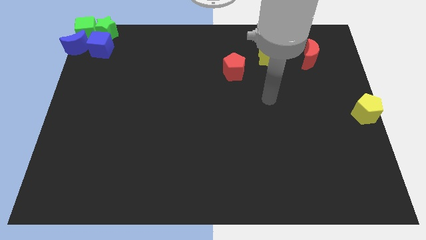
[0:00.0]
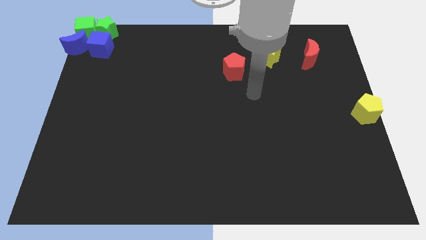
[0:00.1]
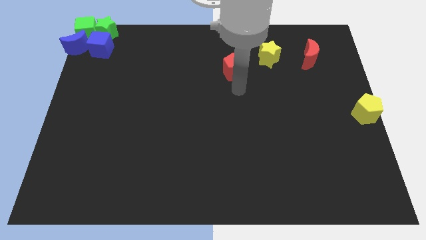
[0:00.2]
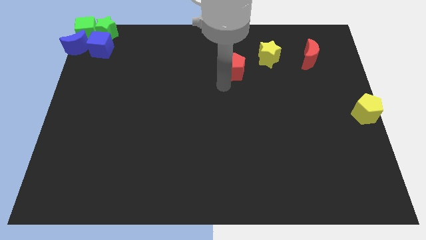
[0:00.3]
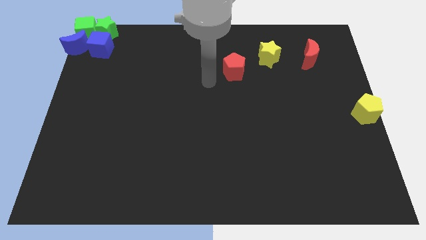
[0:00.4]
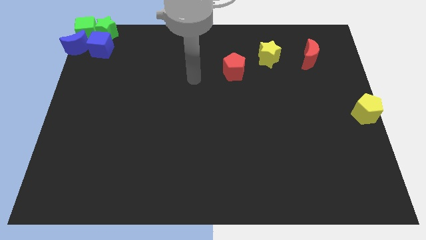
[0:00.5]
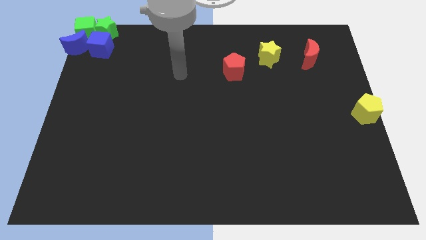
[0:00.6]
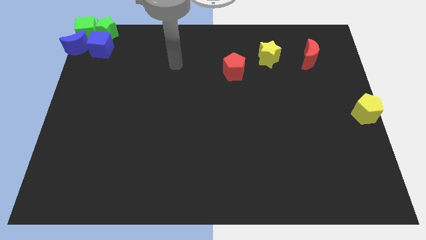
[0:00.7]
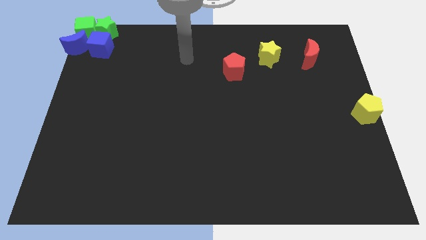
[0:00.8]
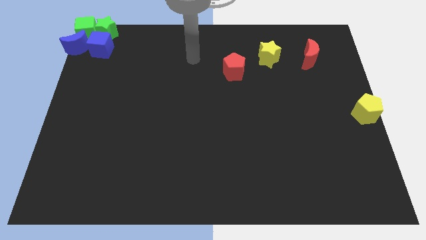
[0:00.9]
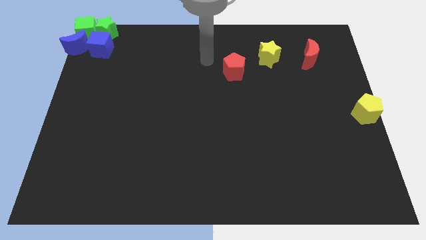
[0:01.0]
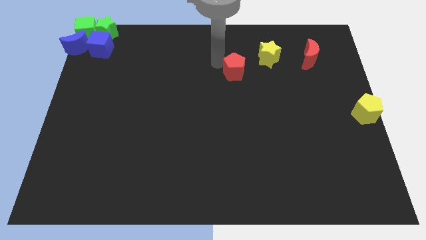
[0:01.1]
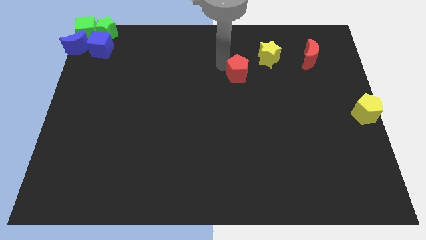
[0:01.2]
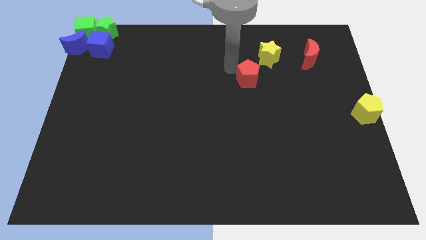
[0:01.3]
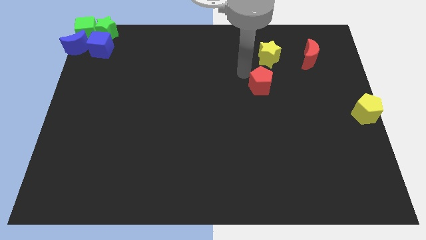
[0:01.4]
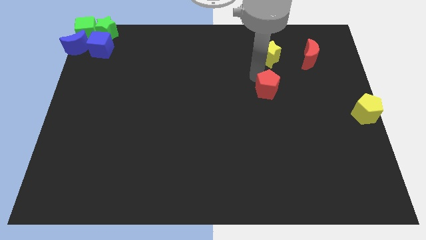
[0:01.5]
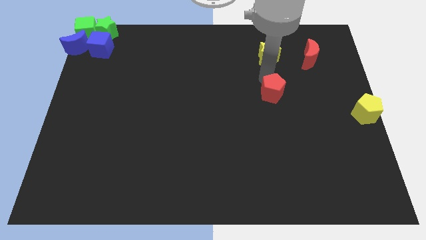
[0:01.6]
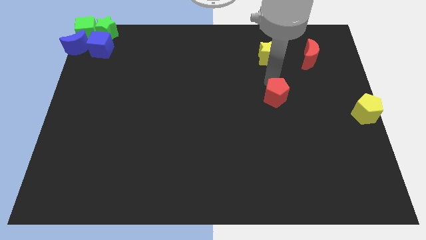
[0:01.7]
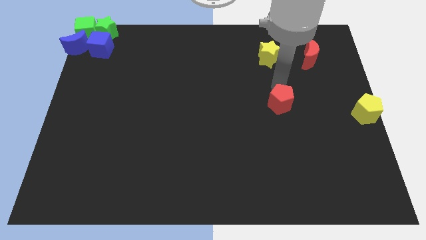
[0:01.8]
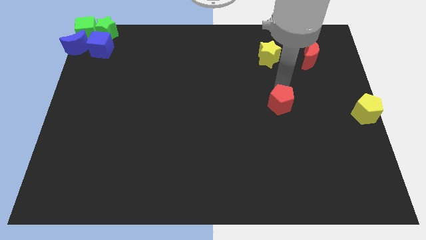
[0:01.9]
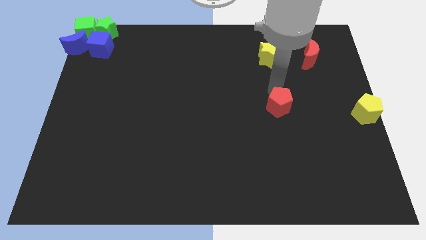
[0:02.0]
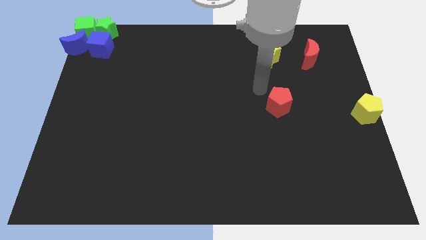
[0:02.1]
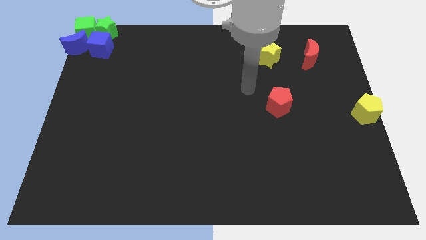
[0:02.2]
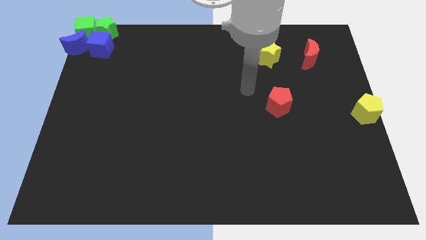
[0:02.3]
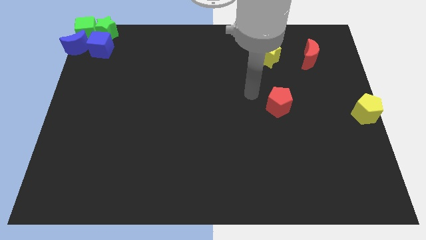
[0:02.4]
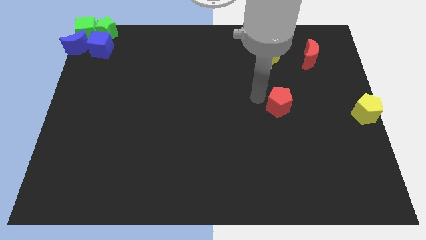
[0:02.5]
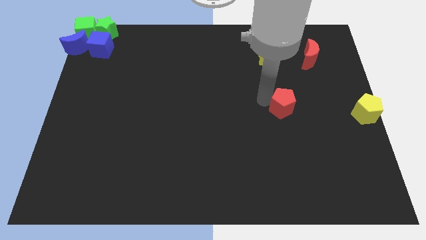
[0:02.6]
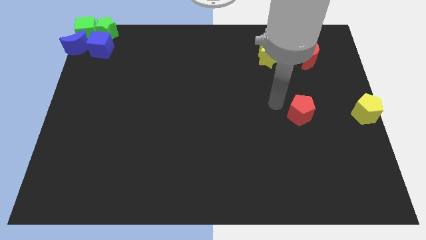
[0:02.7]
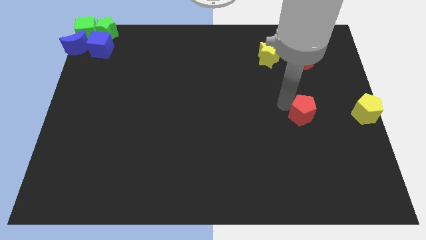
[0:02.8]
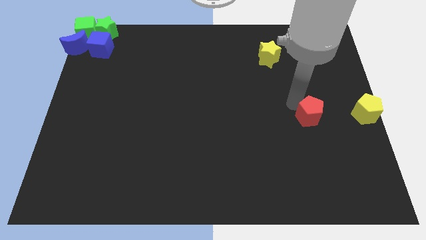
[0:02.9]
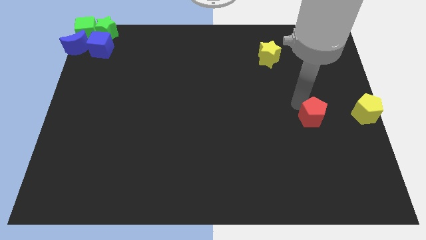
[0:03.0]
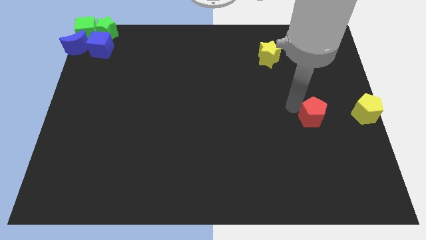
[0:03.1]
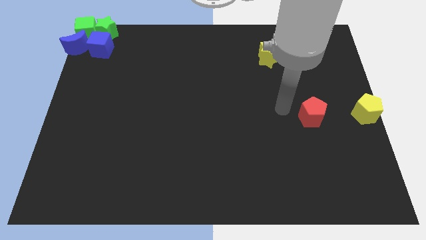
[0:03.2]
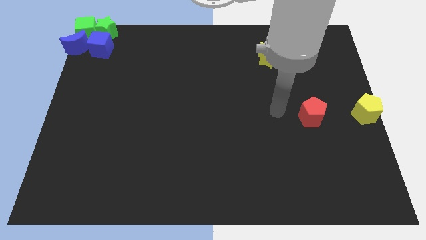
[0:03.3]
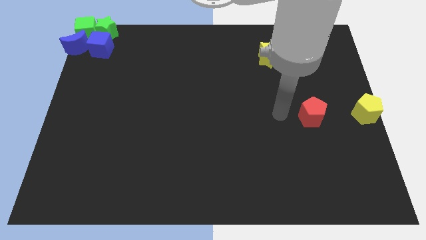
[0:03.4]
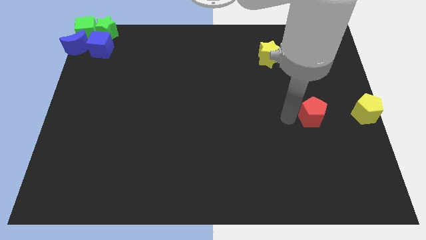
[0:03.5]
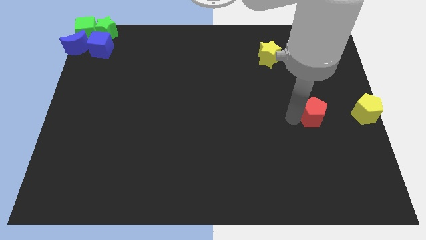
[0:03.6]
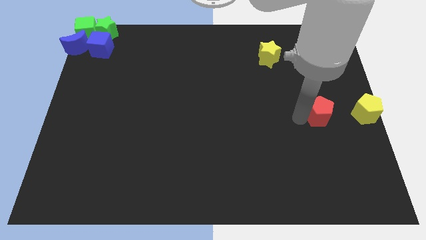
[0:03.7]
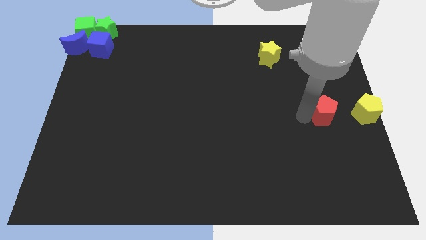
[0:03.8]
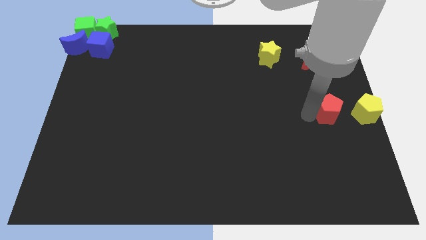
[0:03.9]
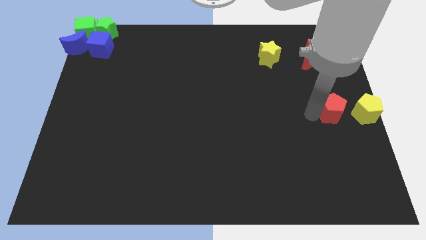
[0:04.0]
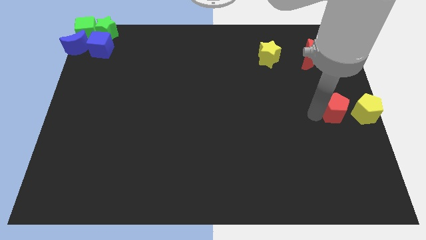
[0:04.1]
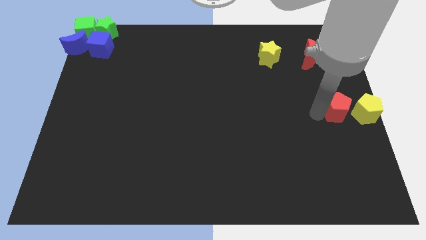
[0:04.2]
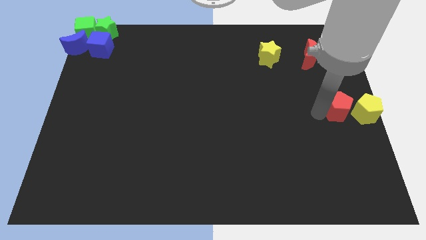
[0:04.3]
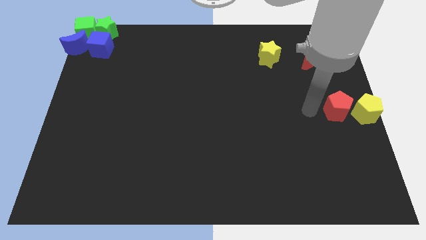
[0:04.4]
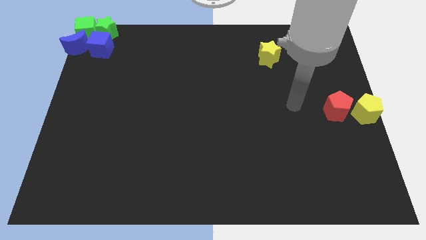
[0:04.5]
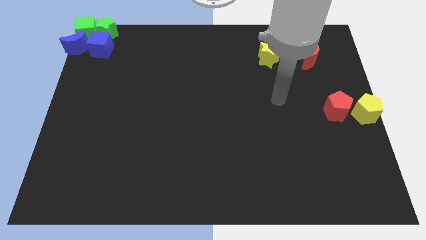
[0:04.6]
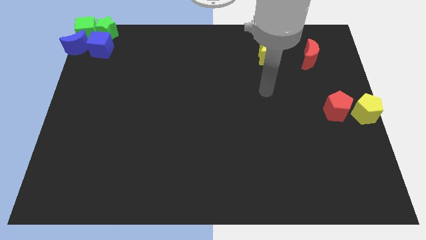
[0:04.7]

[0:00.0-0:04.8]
put the red pentagon to the left side of the yellow pentagon

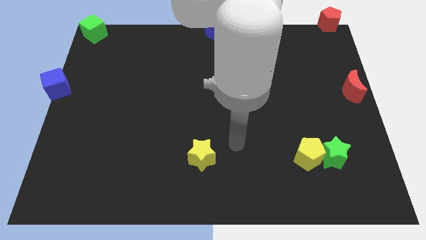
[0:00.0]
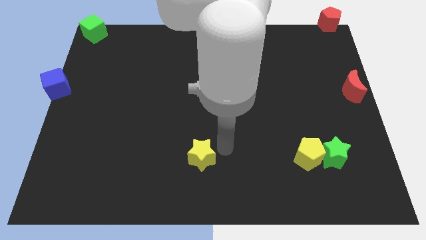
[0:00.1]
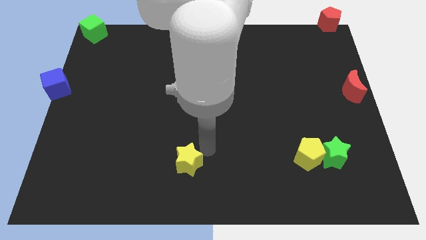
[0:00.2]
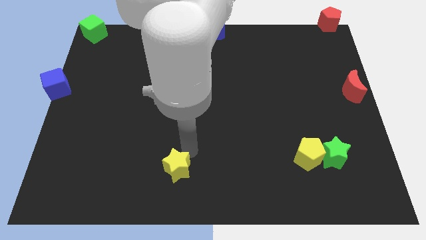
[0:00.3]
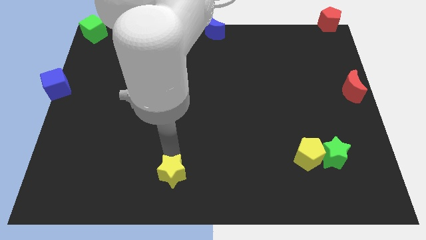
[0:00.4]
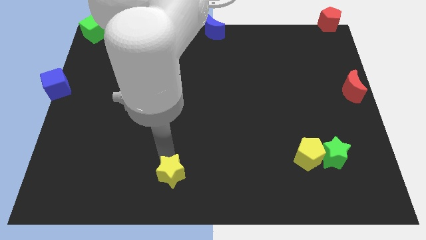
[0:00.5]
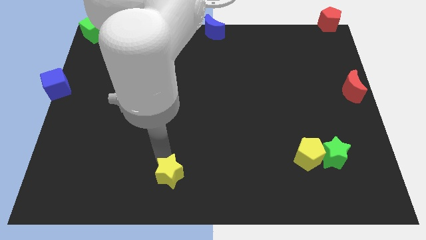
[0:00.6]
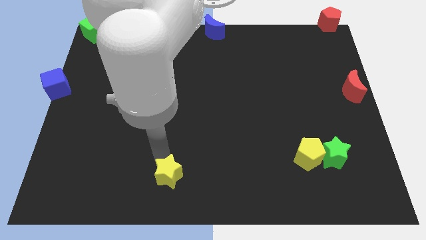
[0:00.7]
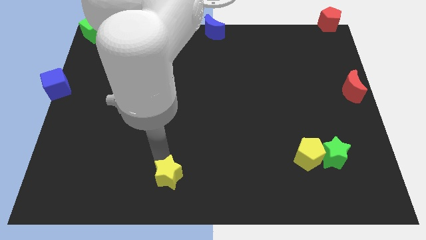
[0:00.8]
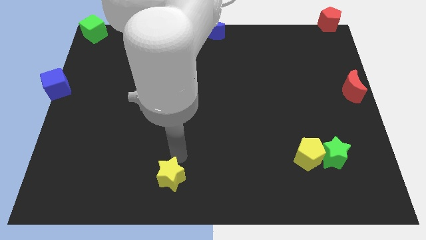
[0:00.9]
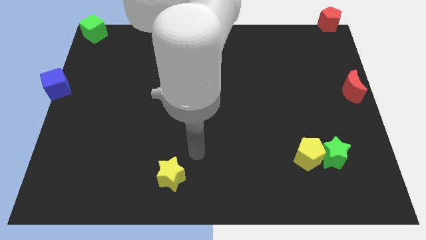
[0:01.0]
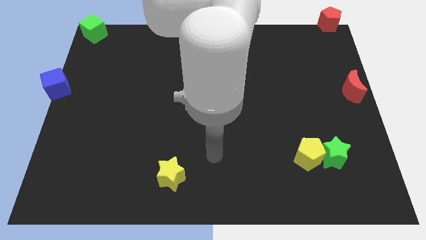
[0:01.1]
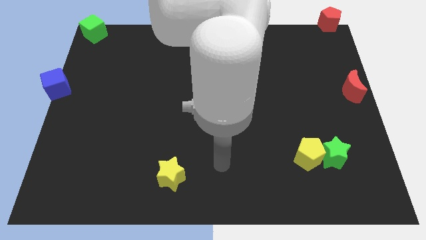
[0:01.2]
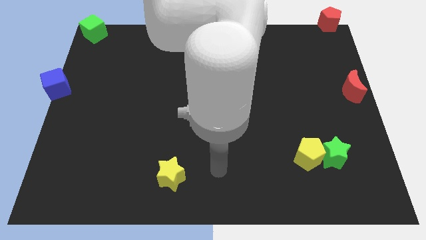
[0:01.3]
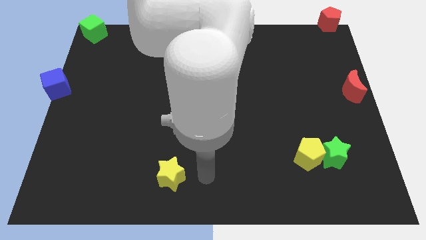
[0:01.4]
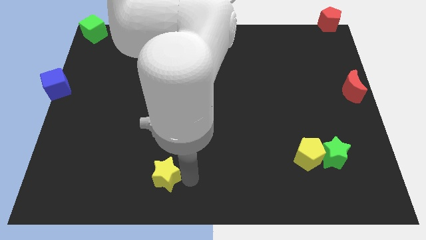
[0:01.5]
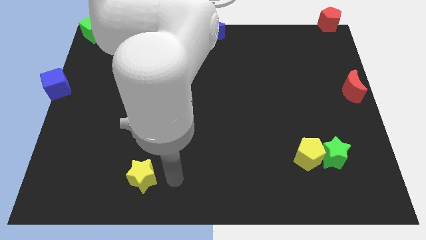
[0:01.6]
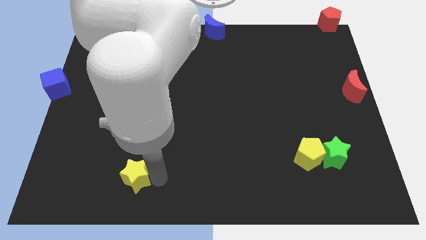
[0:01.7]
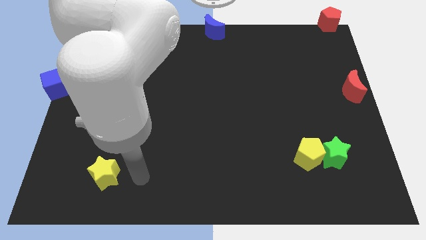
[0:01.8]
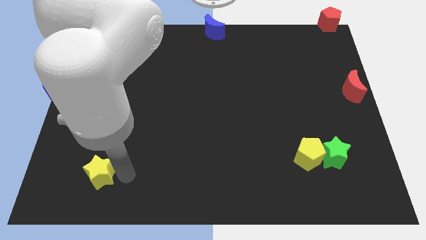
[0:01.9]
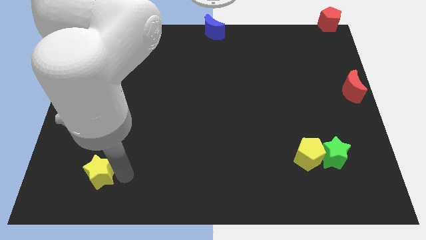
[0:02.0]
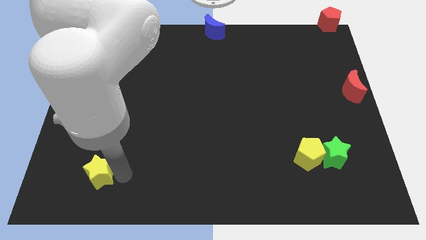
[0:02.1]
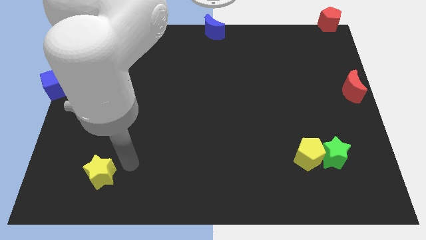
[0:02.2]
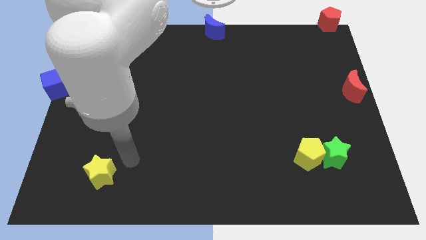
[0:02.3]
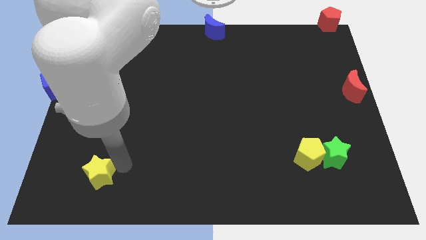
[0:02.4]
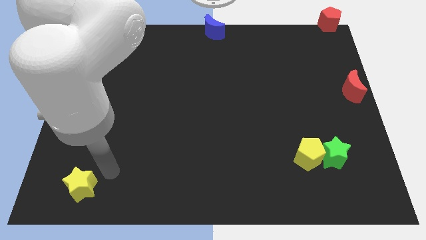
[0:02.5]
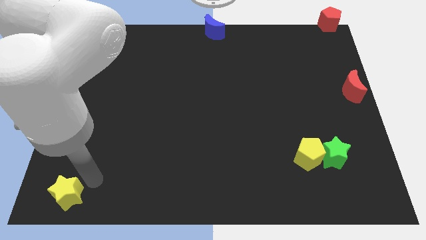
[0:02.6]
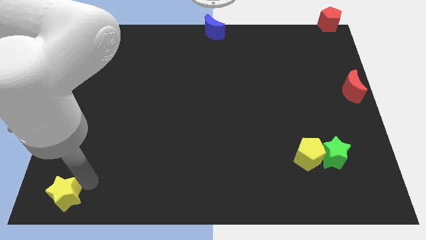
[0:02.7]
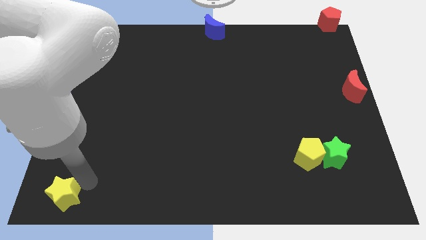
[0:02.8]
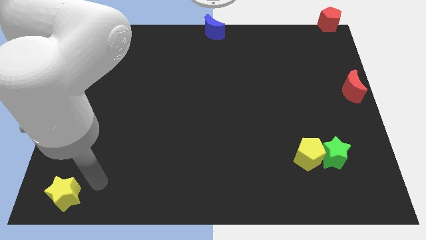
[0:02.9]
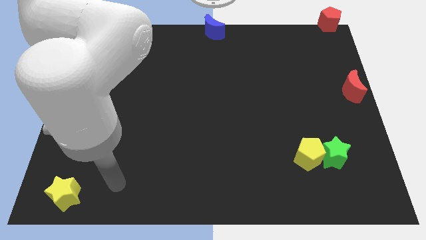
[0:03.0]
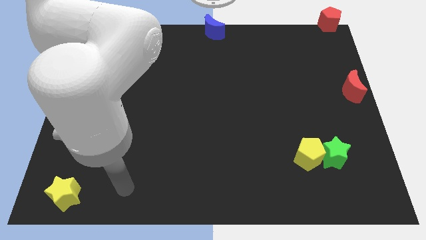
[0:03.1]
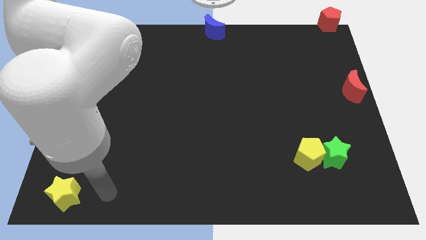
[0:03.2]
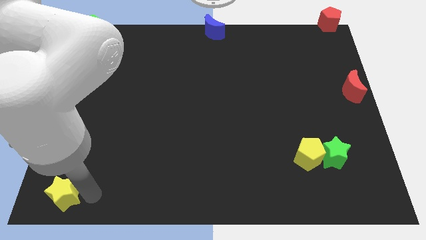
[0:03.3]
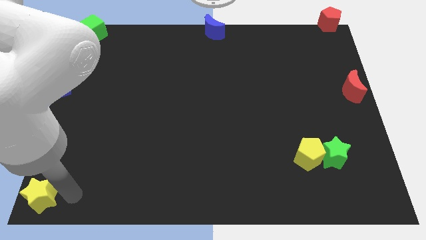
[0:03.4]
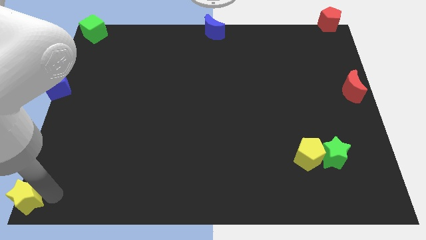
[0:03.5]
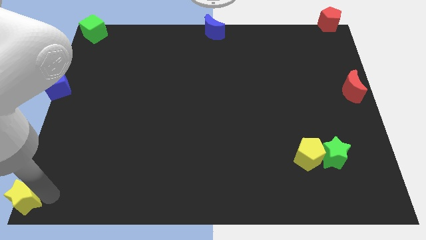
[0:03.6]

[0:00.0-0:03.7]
move the yellow star to the bottom left

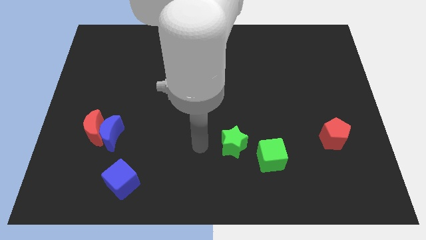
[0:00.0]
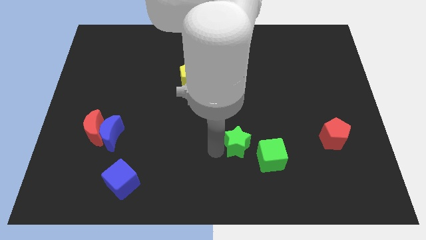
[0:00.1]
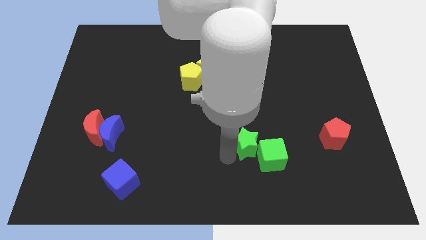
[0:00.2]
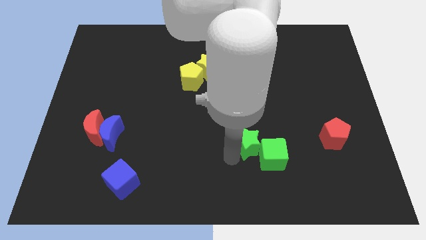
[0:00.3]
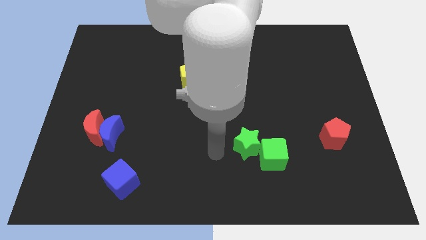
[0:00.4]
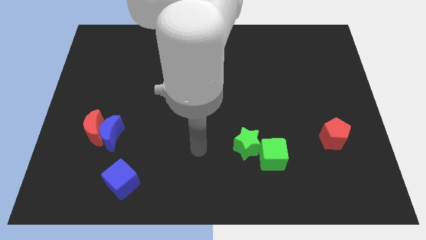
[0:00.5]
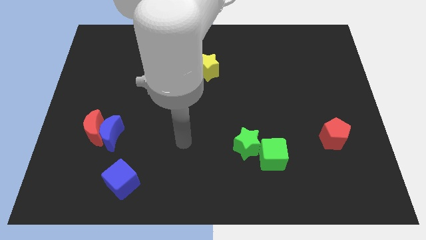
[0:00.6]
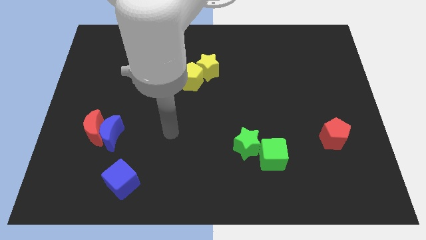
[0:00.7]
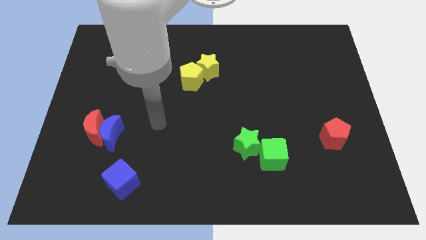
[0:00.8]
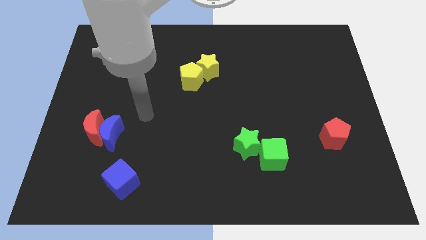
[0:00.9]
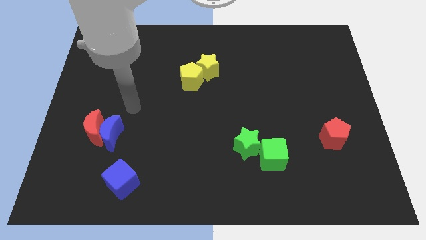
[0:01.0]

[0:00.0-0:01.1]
push the green star into the green cube
